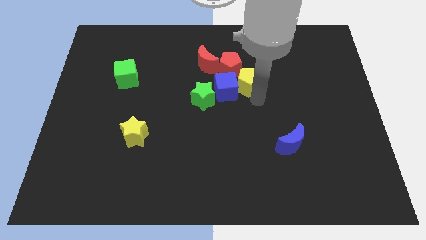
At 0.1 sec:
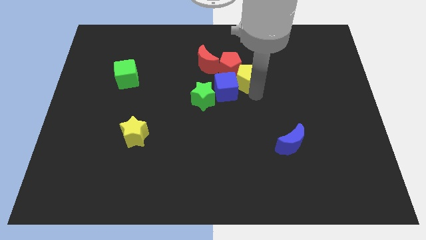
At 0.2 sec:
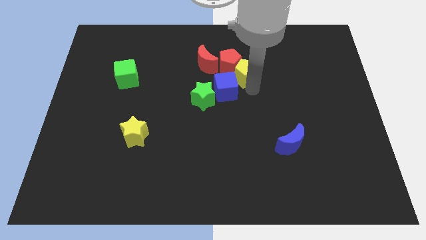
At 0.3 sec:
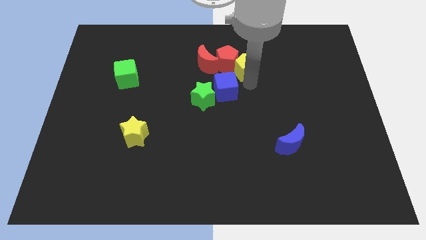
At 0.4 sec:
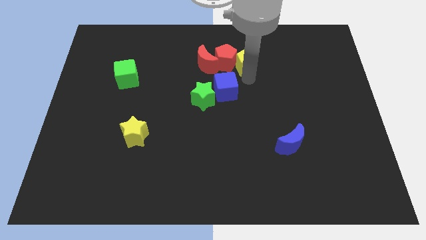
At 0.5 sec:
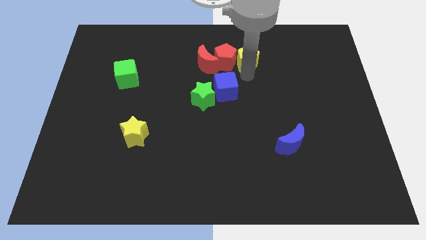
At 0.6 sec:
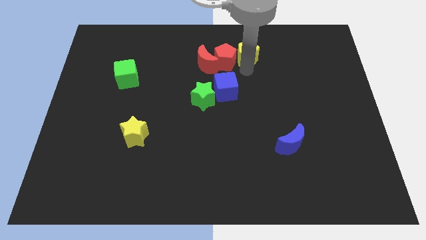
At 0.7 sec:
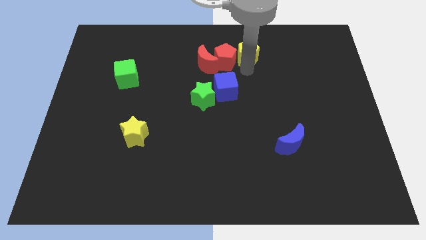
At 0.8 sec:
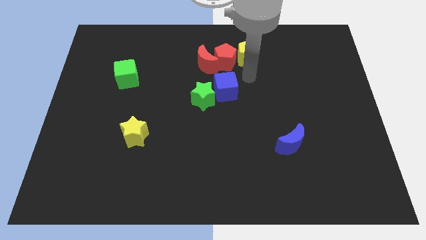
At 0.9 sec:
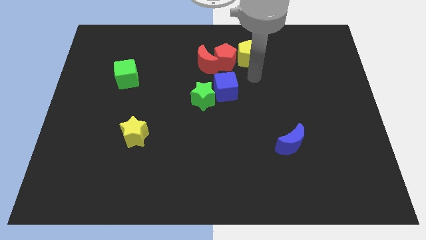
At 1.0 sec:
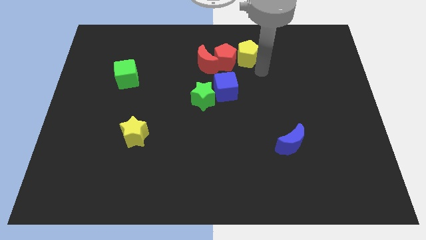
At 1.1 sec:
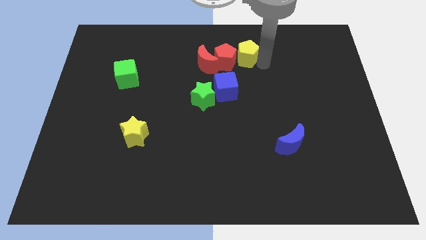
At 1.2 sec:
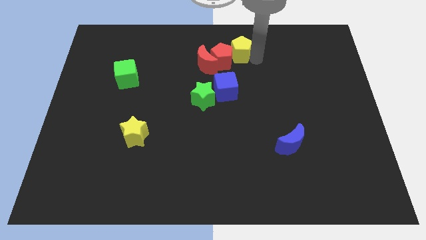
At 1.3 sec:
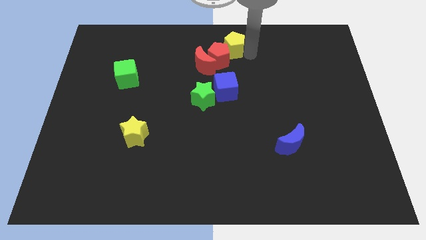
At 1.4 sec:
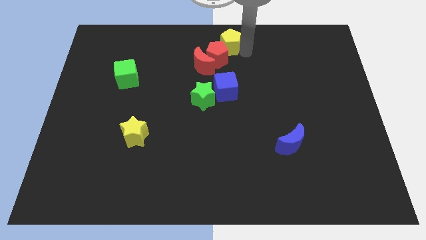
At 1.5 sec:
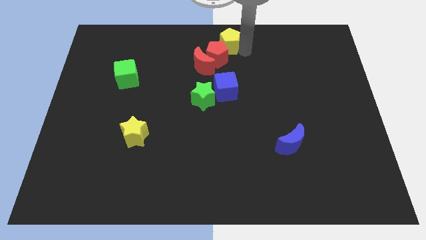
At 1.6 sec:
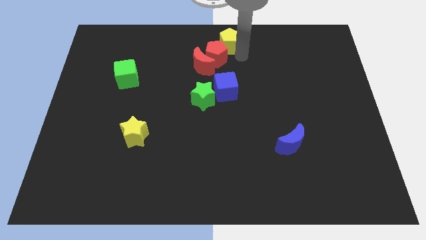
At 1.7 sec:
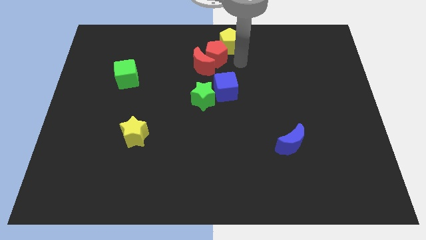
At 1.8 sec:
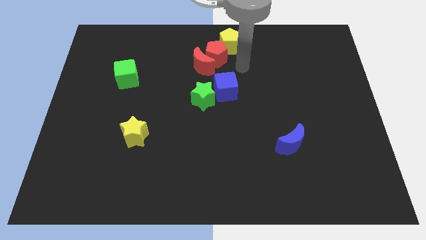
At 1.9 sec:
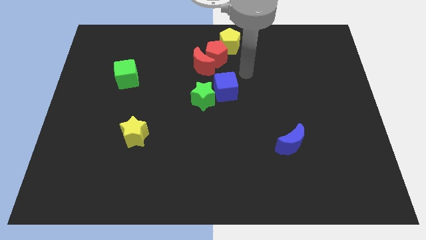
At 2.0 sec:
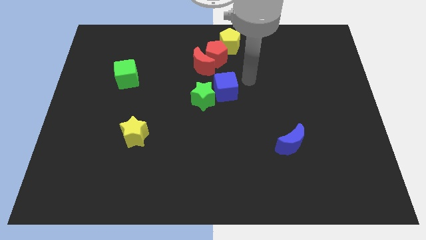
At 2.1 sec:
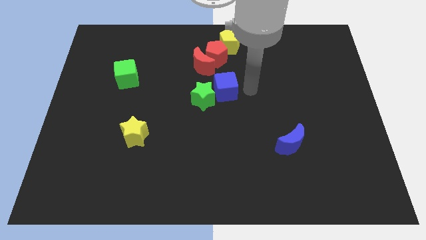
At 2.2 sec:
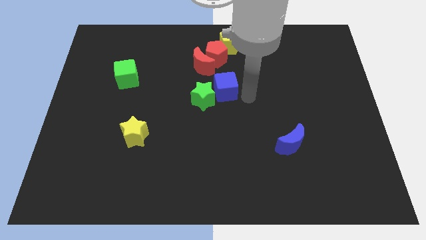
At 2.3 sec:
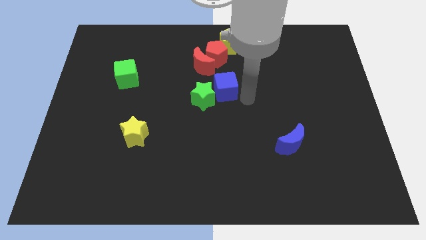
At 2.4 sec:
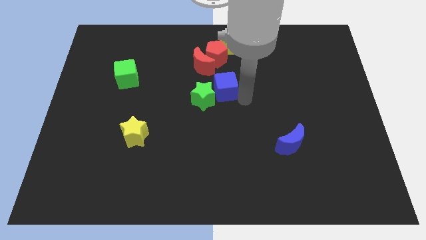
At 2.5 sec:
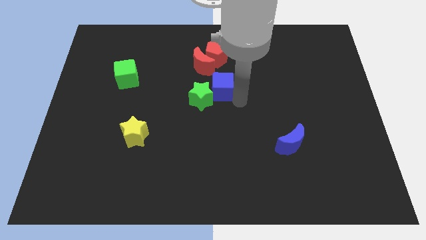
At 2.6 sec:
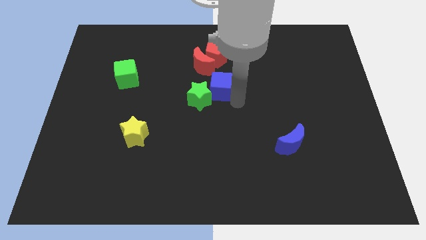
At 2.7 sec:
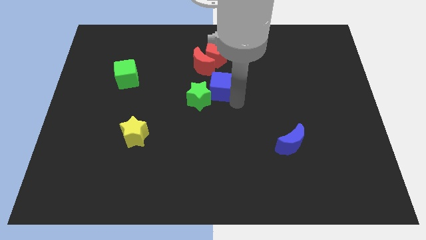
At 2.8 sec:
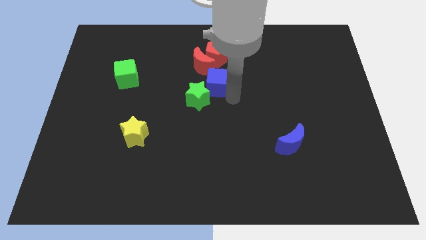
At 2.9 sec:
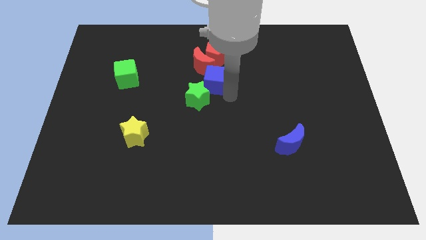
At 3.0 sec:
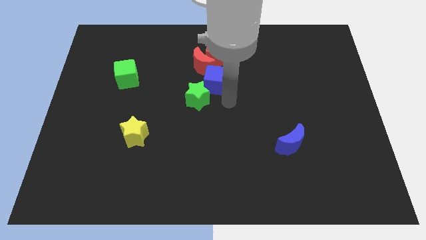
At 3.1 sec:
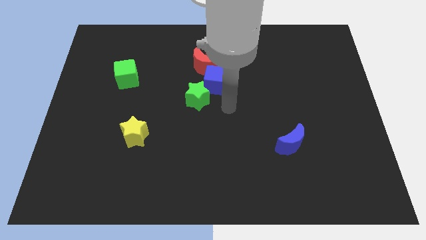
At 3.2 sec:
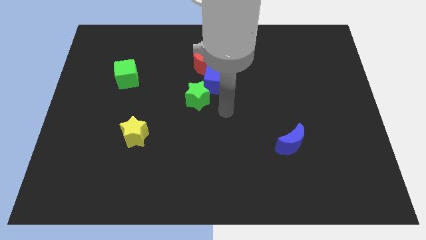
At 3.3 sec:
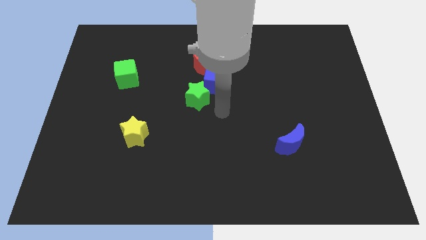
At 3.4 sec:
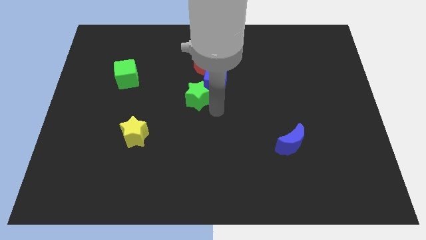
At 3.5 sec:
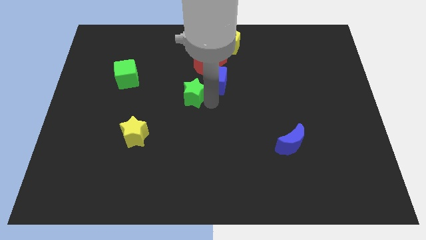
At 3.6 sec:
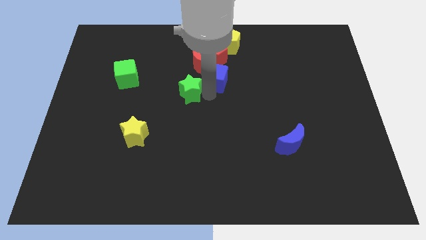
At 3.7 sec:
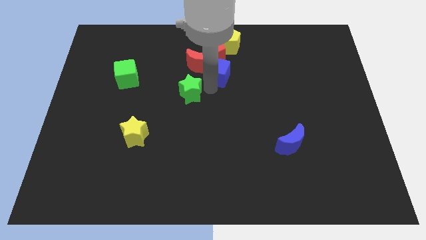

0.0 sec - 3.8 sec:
push the yellow pentagon towards the top right of the red pentagon

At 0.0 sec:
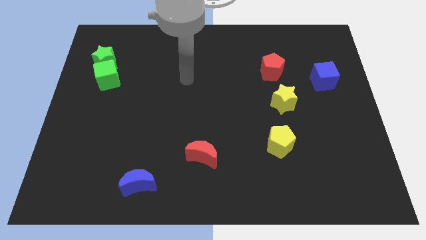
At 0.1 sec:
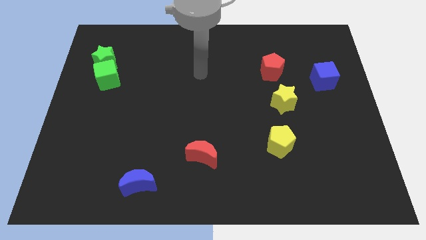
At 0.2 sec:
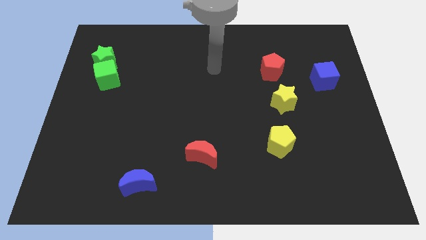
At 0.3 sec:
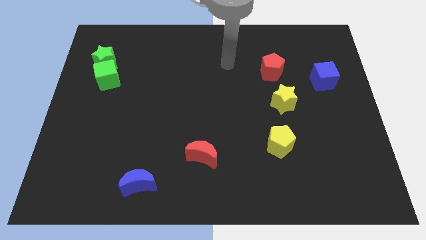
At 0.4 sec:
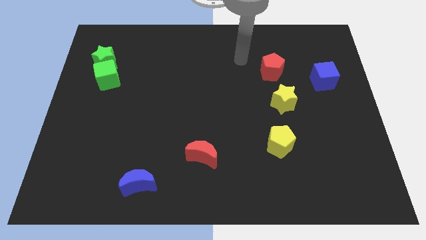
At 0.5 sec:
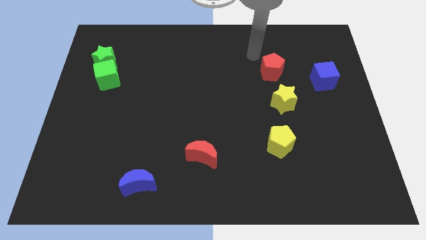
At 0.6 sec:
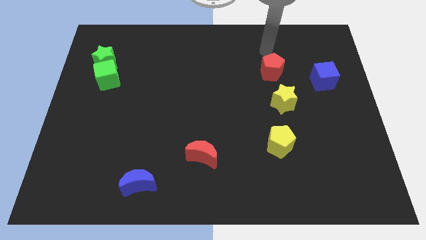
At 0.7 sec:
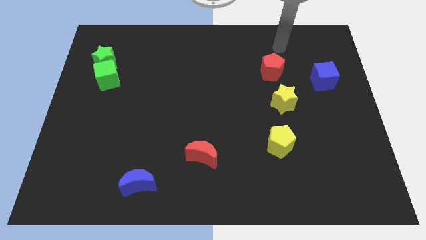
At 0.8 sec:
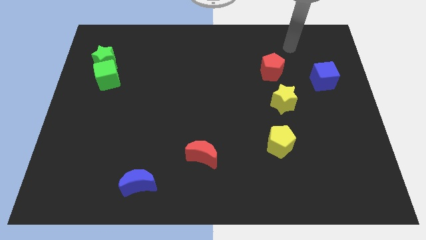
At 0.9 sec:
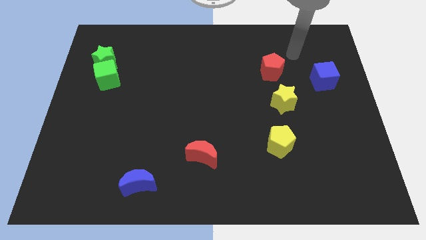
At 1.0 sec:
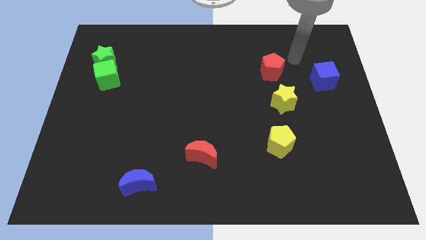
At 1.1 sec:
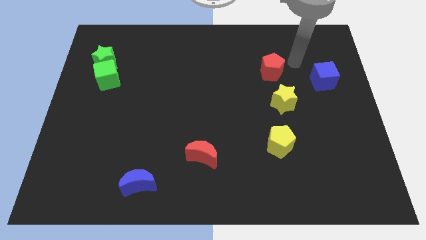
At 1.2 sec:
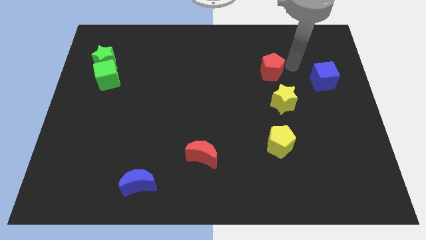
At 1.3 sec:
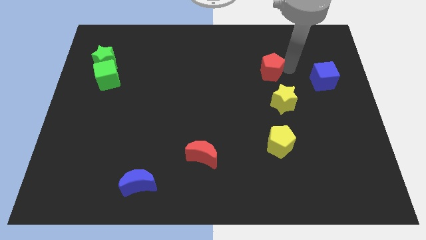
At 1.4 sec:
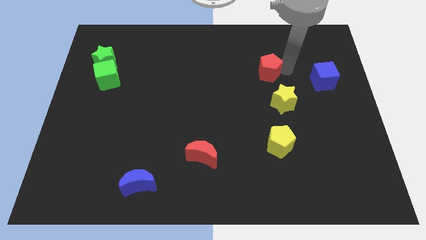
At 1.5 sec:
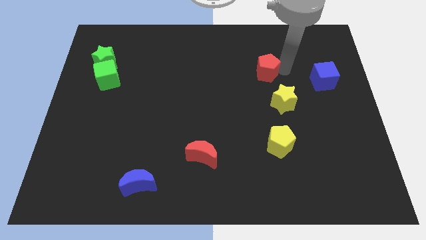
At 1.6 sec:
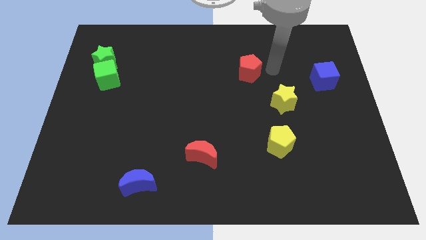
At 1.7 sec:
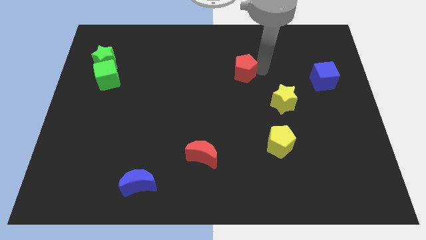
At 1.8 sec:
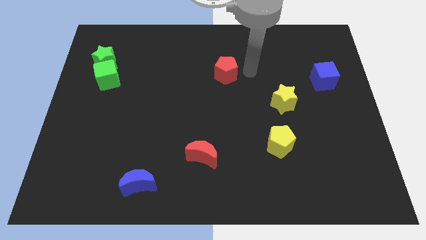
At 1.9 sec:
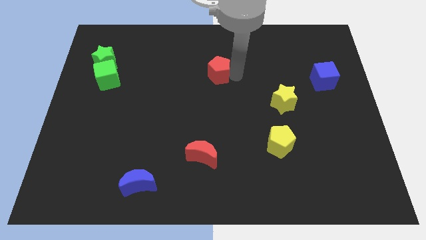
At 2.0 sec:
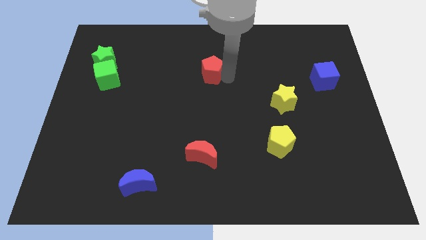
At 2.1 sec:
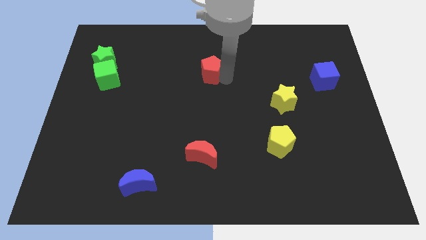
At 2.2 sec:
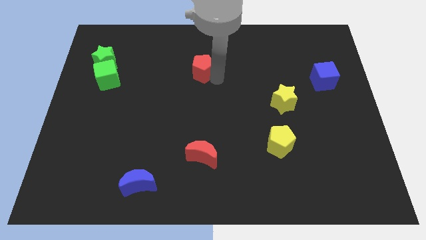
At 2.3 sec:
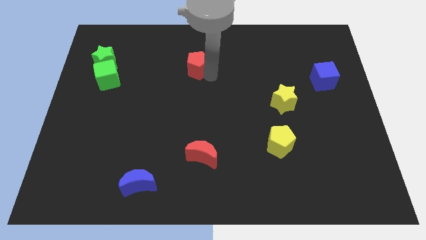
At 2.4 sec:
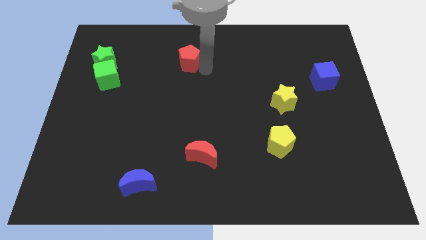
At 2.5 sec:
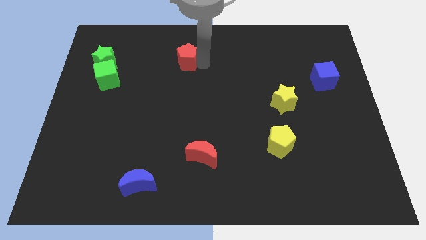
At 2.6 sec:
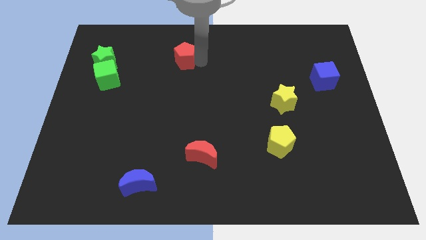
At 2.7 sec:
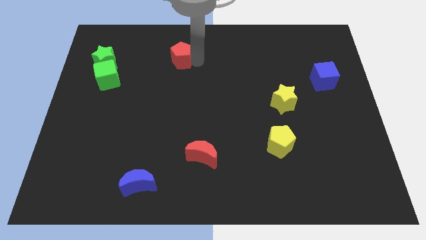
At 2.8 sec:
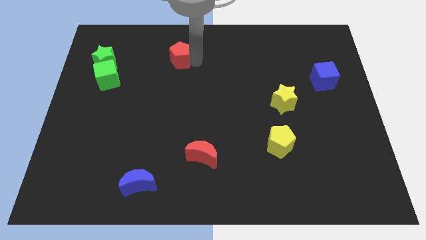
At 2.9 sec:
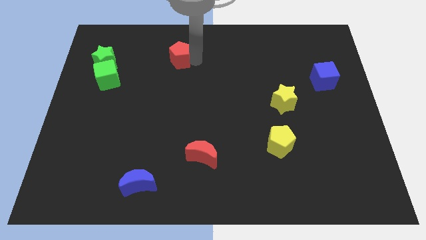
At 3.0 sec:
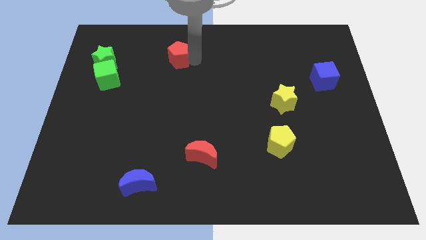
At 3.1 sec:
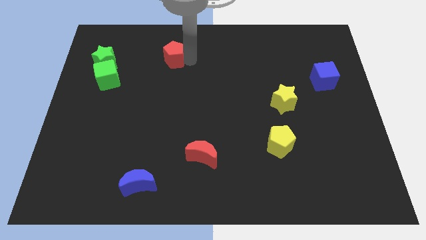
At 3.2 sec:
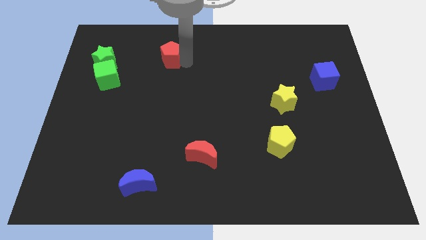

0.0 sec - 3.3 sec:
push the red pentagon to the left

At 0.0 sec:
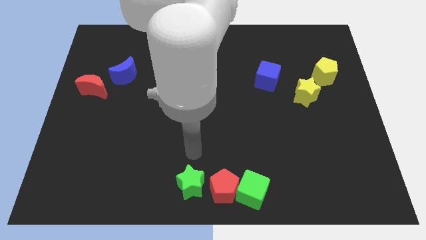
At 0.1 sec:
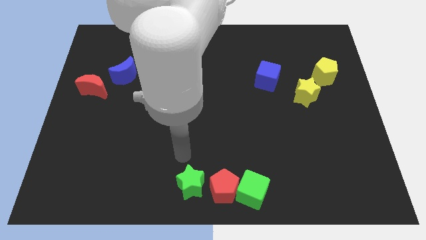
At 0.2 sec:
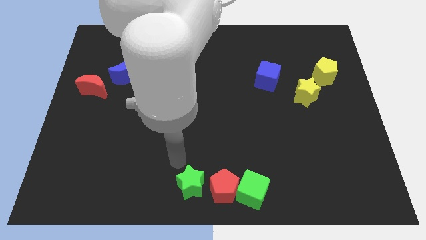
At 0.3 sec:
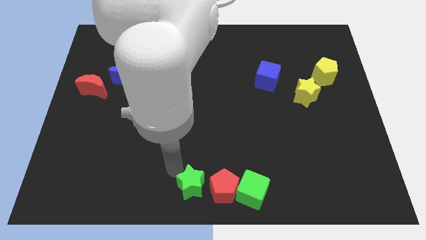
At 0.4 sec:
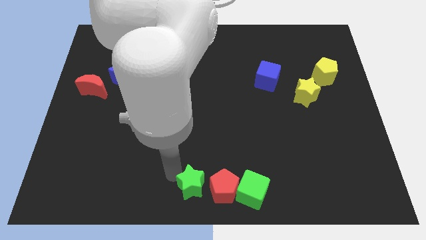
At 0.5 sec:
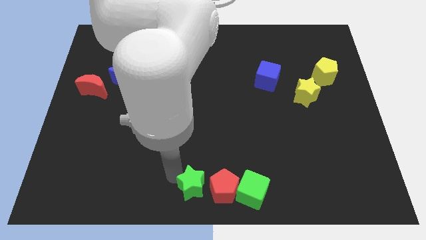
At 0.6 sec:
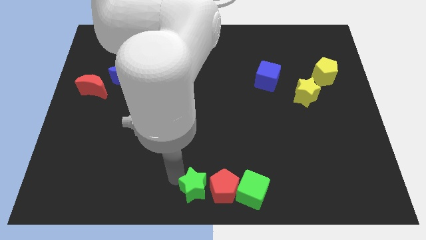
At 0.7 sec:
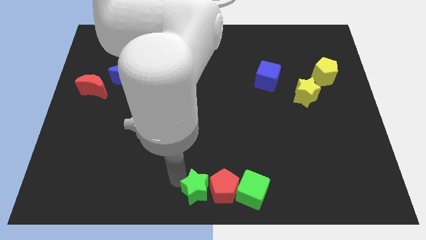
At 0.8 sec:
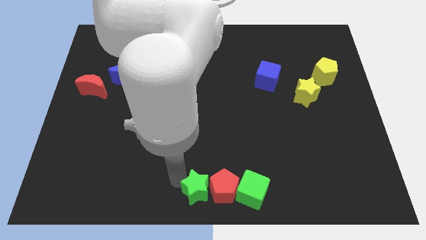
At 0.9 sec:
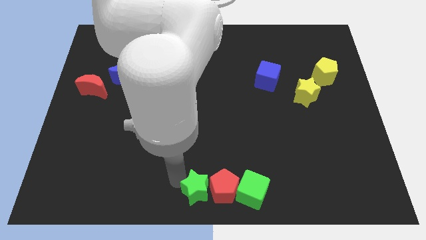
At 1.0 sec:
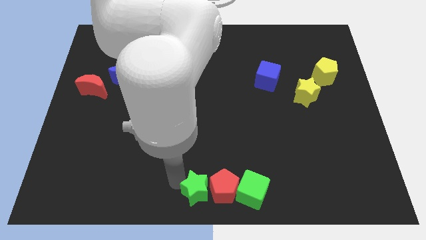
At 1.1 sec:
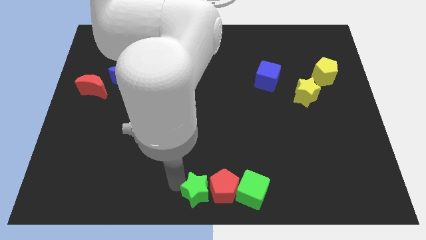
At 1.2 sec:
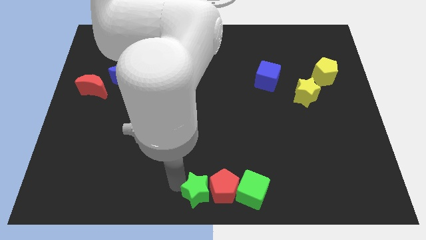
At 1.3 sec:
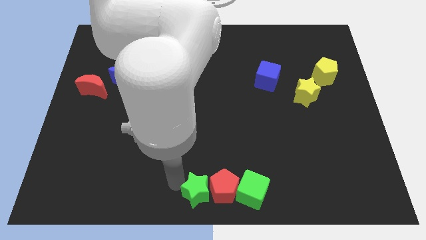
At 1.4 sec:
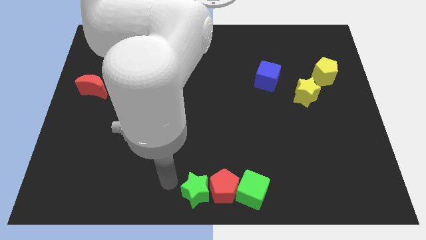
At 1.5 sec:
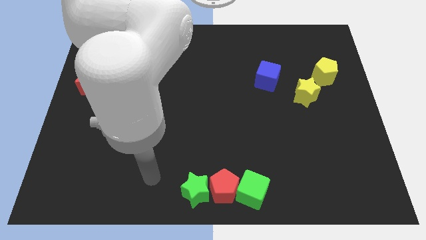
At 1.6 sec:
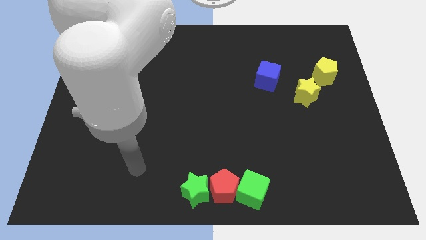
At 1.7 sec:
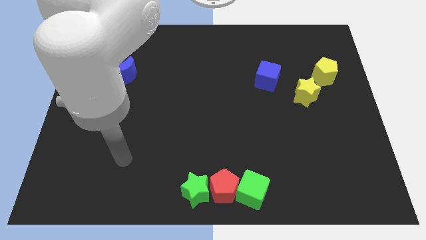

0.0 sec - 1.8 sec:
move the green star to the left side of the red pentagon
